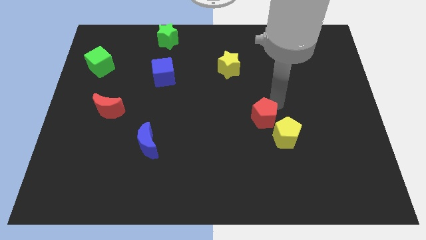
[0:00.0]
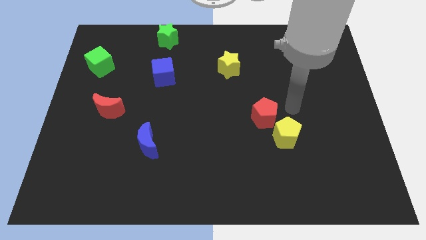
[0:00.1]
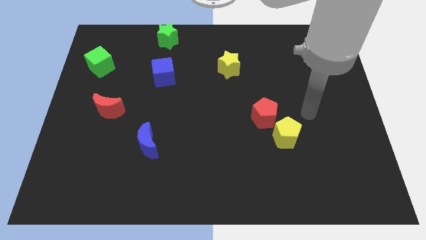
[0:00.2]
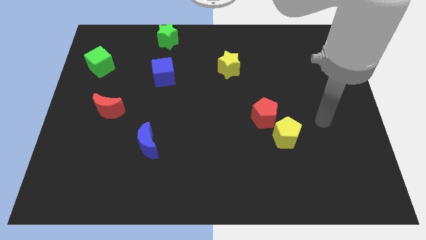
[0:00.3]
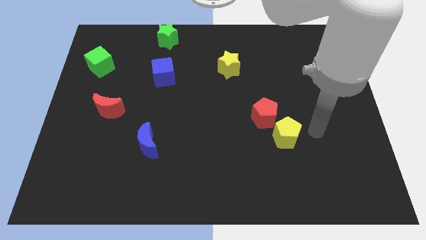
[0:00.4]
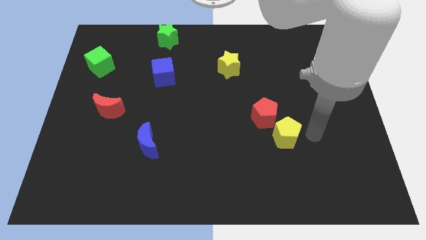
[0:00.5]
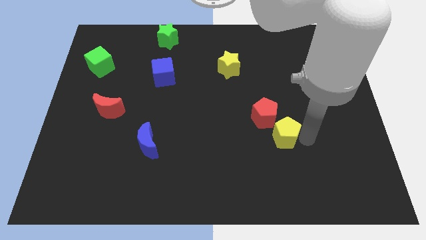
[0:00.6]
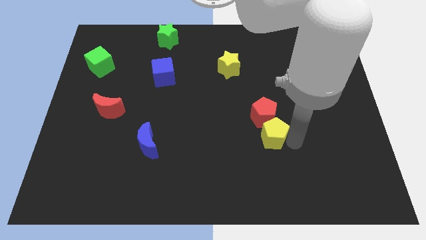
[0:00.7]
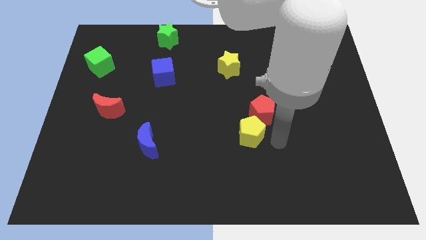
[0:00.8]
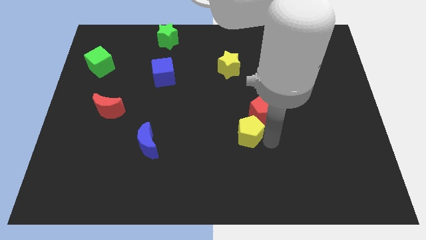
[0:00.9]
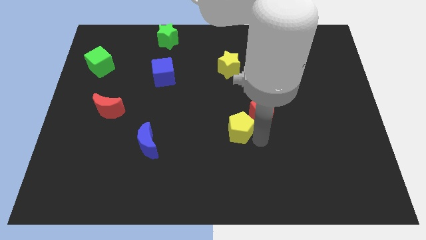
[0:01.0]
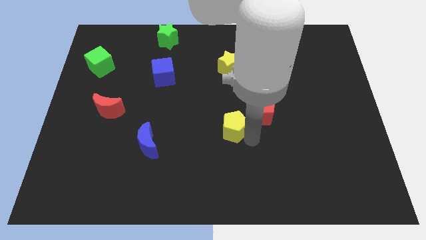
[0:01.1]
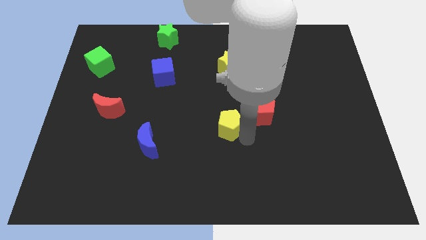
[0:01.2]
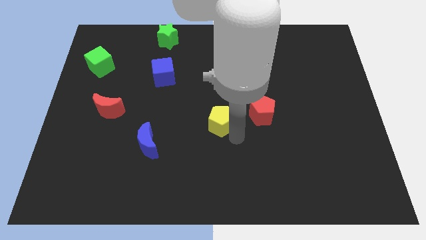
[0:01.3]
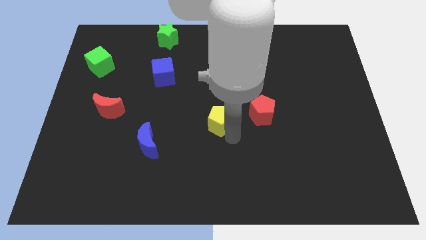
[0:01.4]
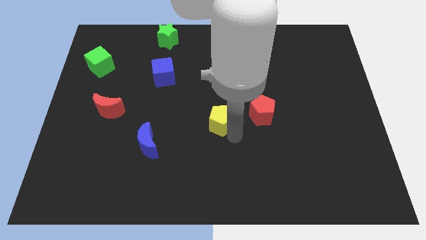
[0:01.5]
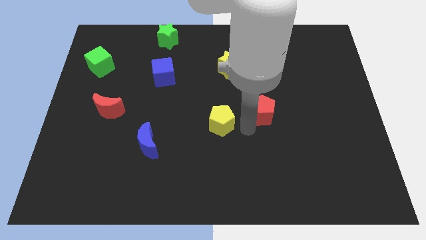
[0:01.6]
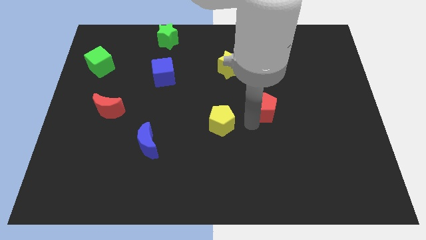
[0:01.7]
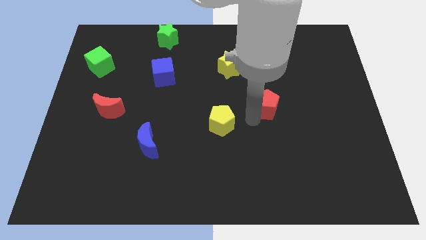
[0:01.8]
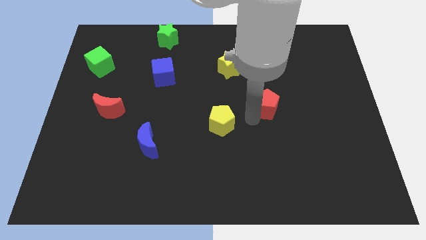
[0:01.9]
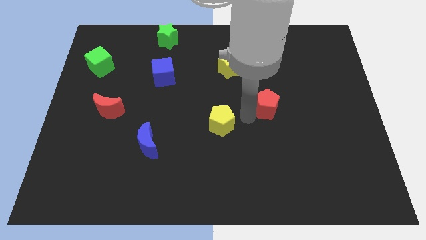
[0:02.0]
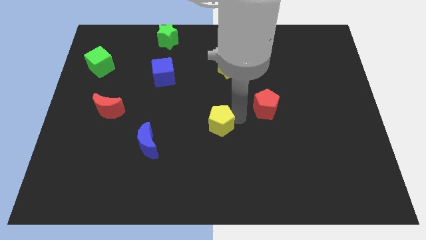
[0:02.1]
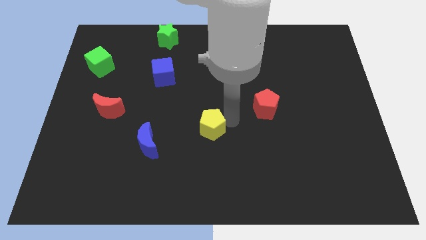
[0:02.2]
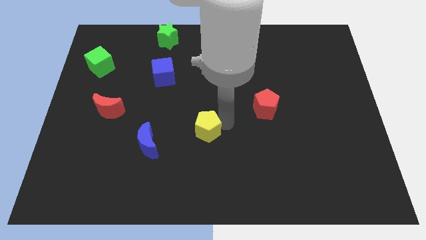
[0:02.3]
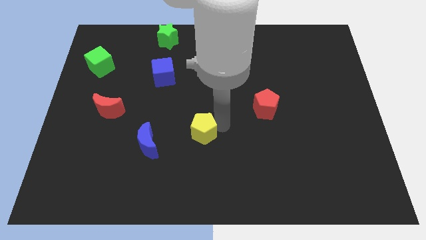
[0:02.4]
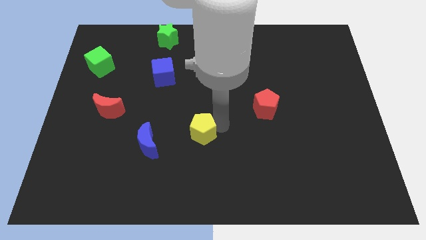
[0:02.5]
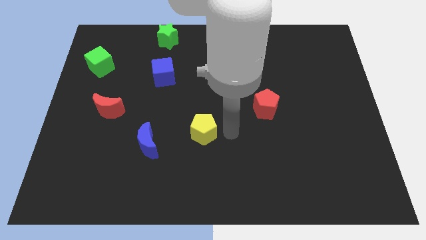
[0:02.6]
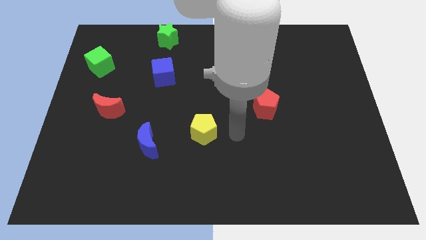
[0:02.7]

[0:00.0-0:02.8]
move the yellow pentagon towards the center

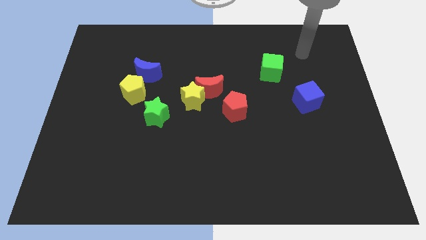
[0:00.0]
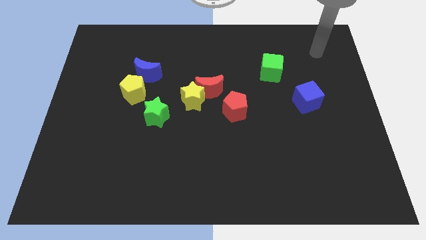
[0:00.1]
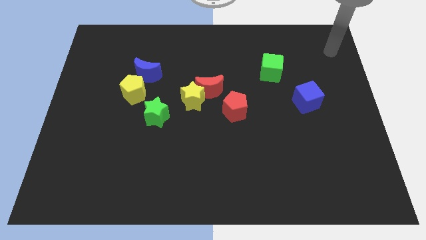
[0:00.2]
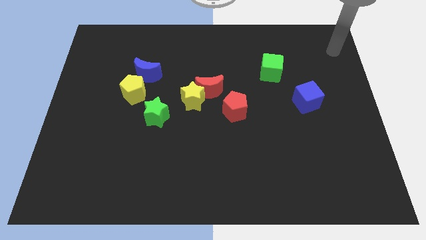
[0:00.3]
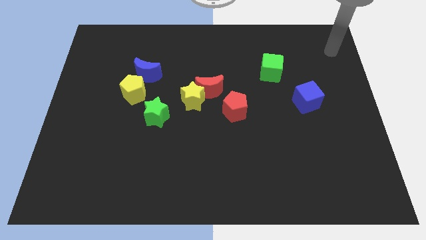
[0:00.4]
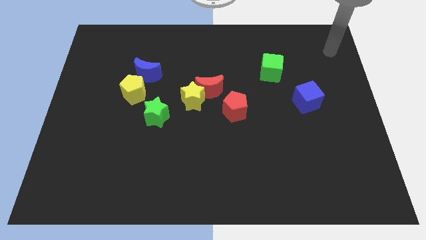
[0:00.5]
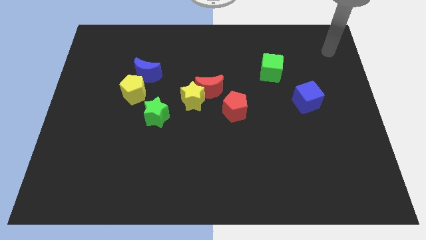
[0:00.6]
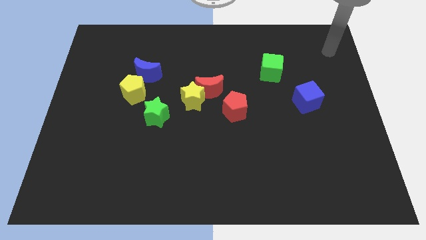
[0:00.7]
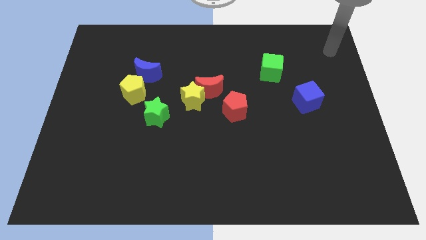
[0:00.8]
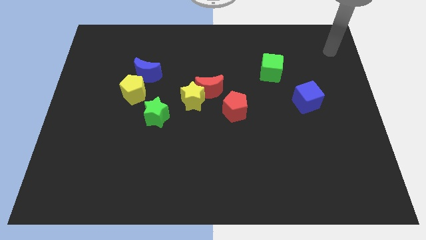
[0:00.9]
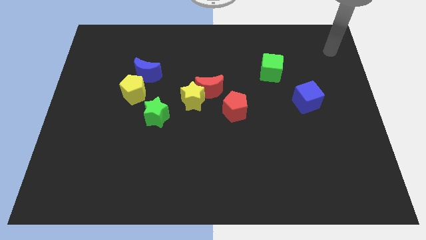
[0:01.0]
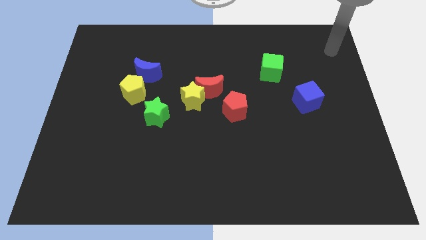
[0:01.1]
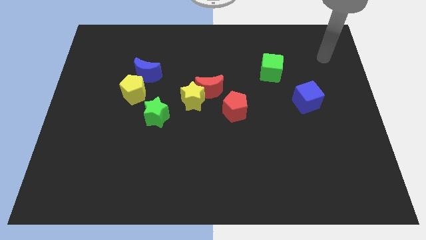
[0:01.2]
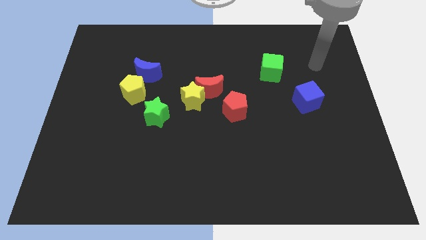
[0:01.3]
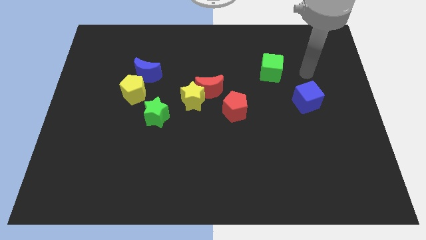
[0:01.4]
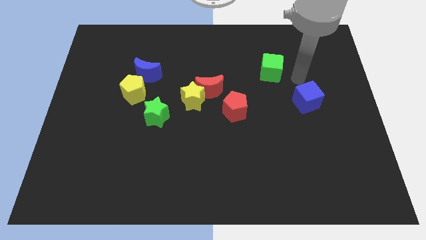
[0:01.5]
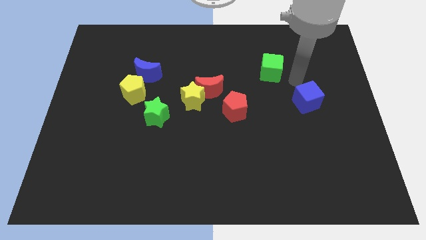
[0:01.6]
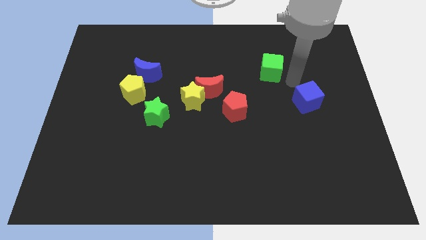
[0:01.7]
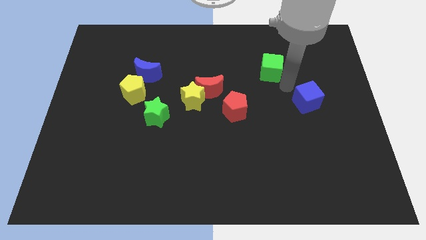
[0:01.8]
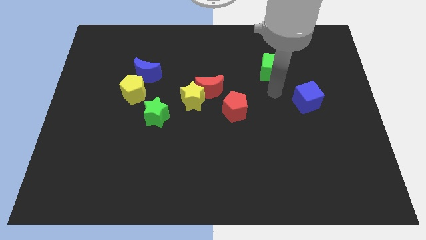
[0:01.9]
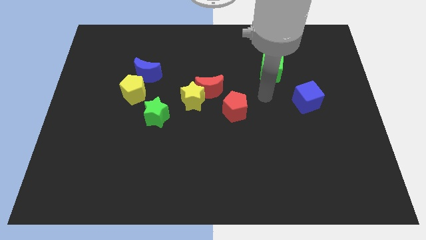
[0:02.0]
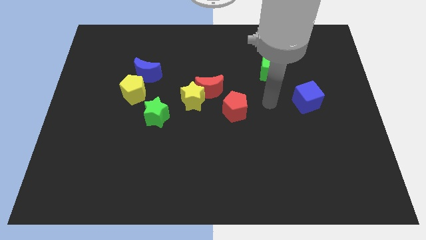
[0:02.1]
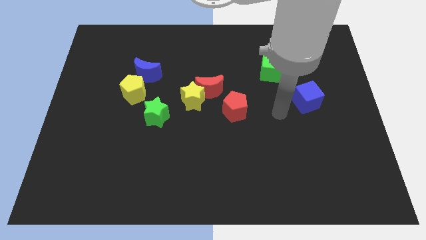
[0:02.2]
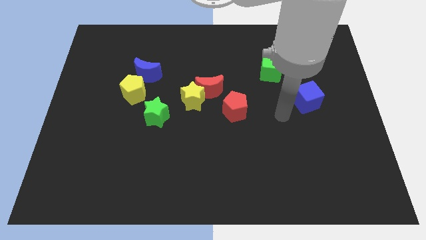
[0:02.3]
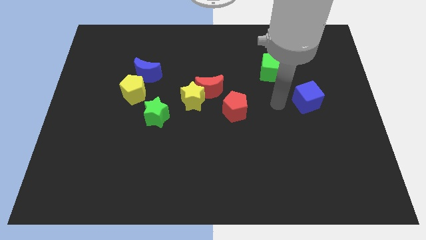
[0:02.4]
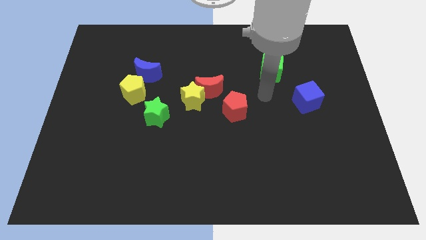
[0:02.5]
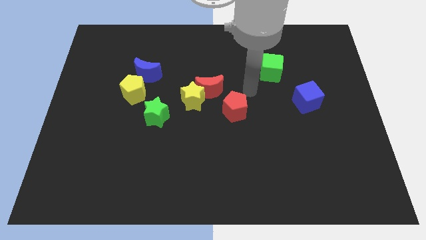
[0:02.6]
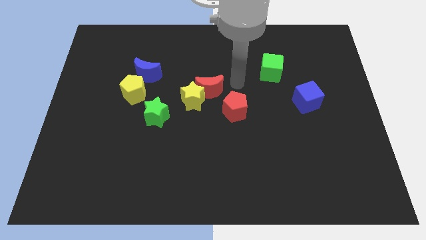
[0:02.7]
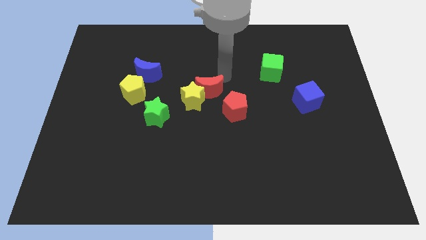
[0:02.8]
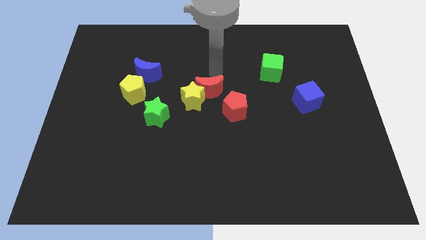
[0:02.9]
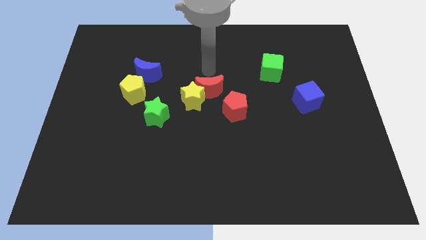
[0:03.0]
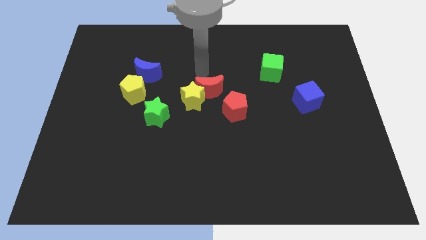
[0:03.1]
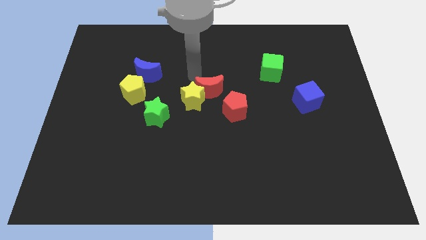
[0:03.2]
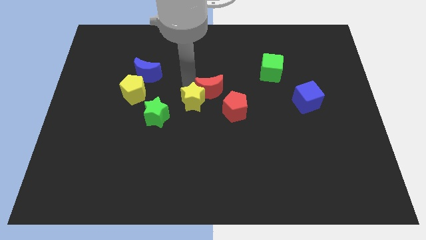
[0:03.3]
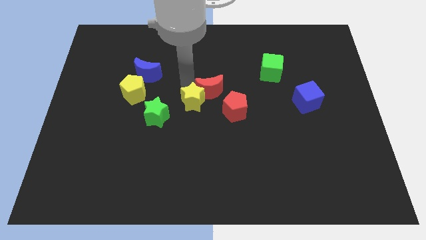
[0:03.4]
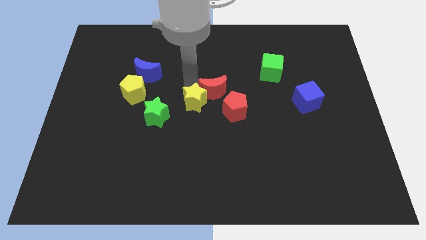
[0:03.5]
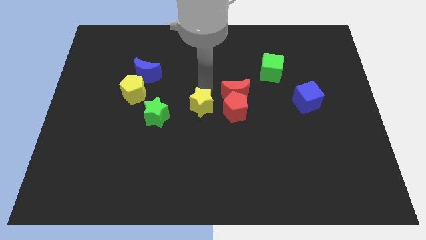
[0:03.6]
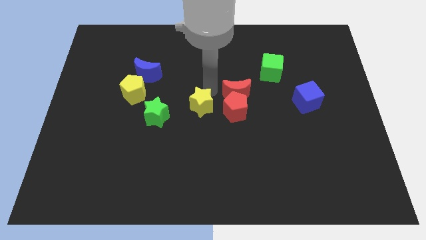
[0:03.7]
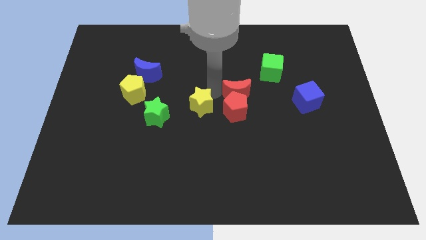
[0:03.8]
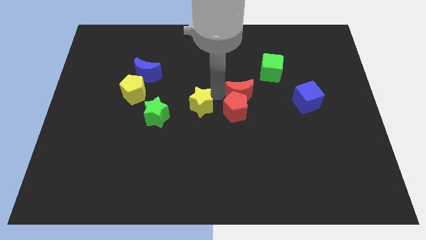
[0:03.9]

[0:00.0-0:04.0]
place the red crescent above the red pentagon

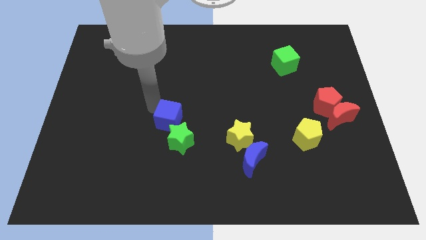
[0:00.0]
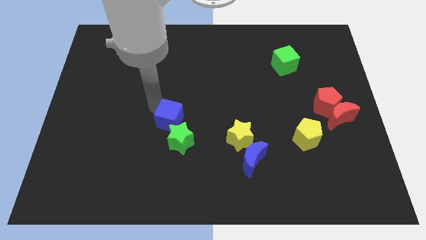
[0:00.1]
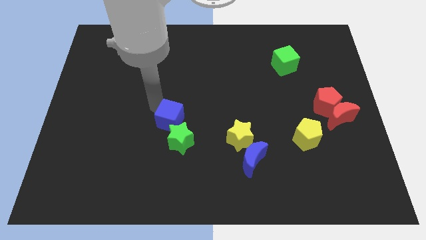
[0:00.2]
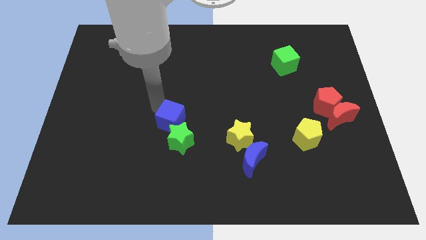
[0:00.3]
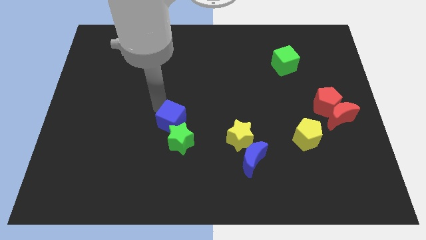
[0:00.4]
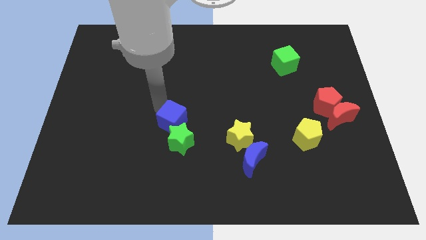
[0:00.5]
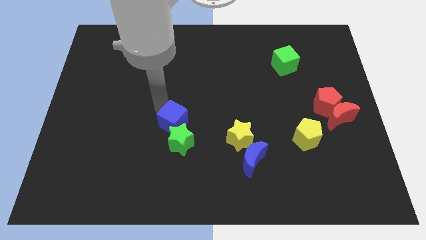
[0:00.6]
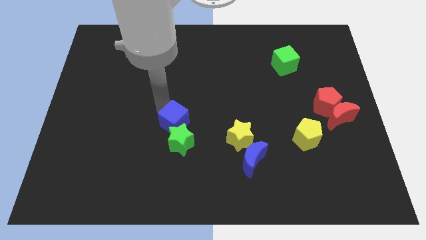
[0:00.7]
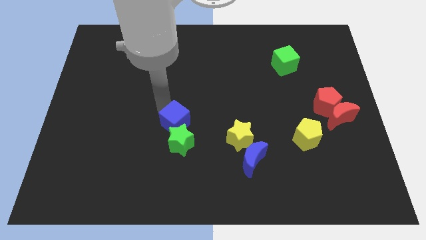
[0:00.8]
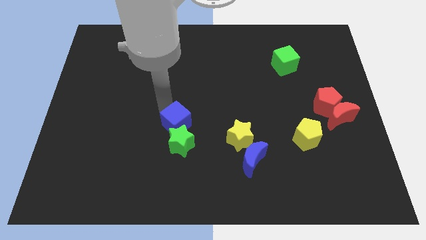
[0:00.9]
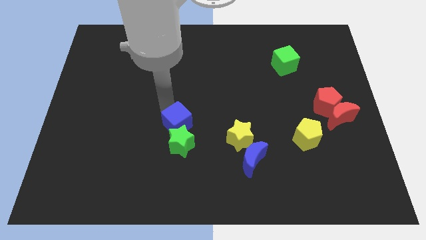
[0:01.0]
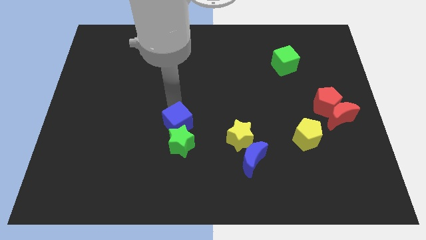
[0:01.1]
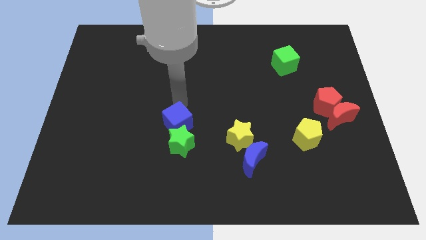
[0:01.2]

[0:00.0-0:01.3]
place blue cube above green star

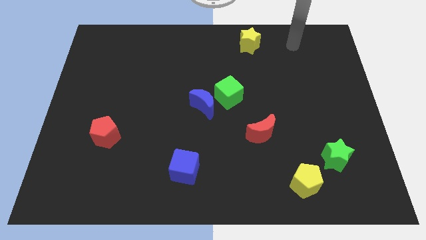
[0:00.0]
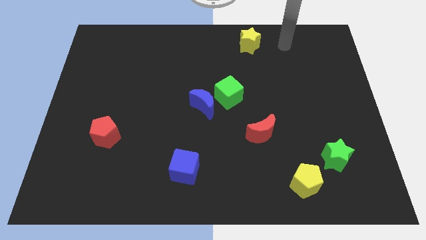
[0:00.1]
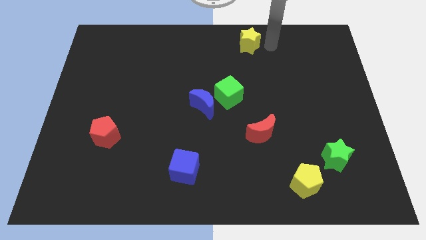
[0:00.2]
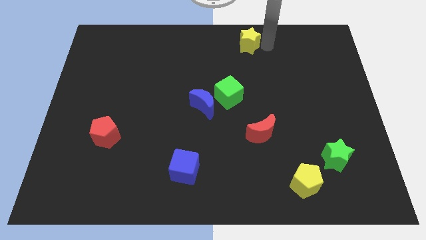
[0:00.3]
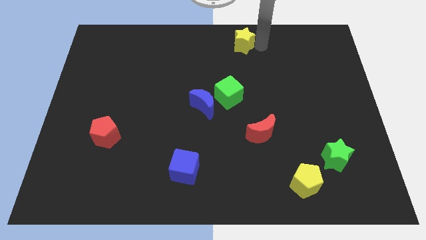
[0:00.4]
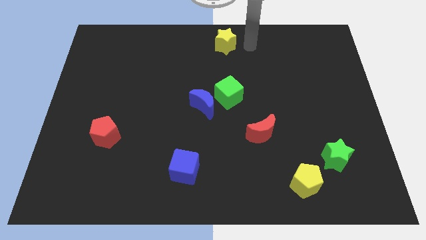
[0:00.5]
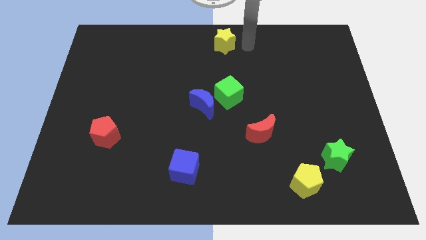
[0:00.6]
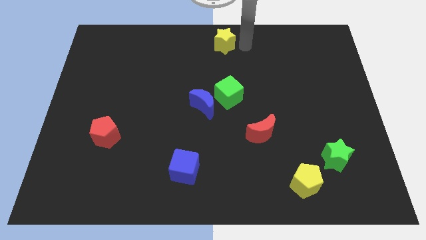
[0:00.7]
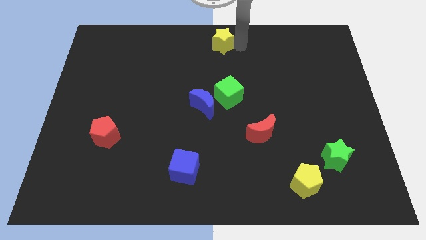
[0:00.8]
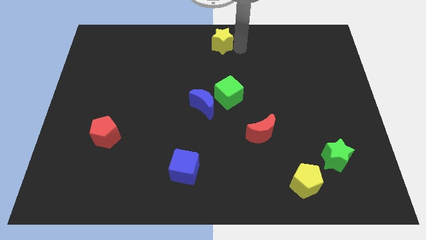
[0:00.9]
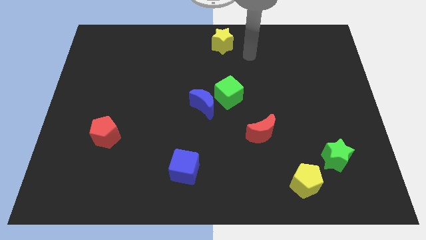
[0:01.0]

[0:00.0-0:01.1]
move the yellow star above the green cube
